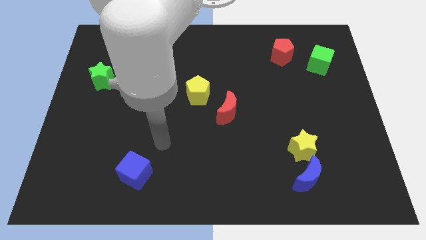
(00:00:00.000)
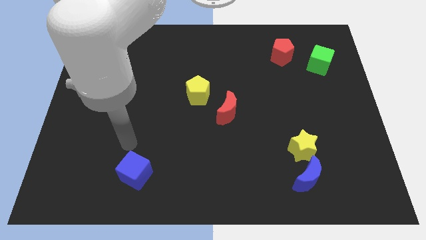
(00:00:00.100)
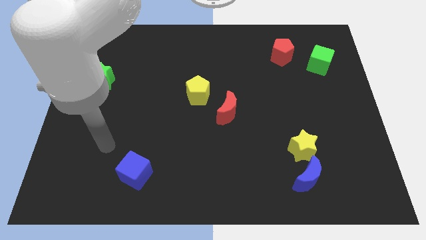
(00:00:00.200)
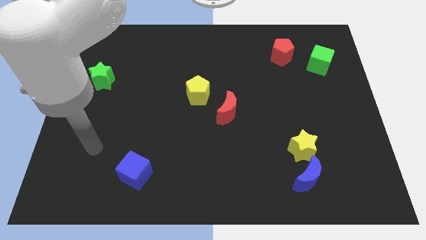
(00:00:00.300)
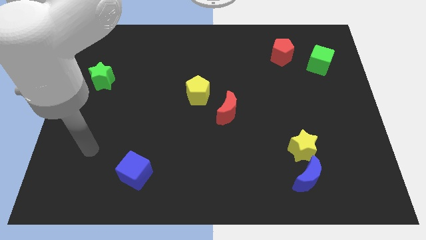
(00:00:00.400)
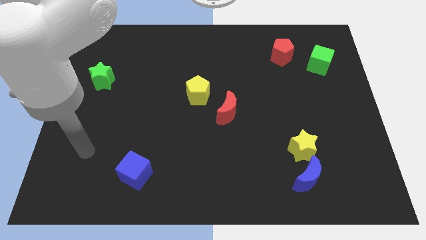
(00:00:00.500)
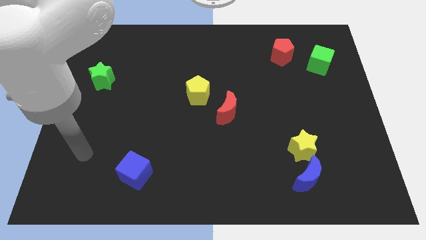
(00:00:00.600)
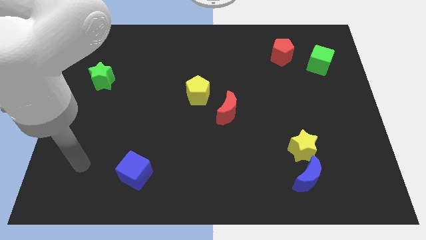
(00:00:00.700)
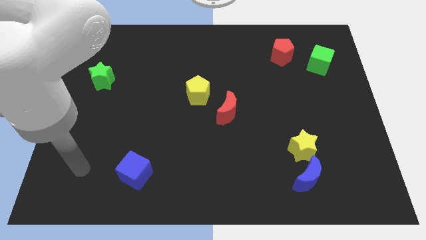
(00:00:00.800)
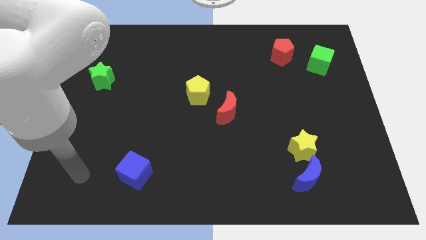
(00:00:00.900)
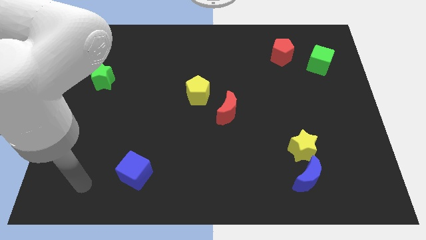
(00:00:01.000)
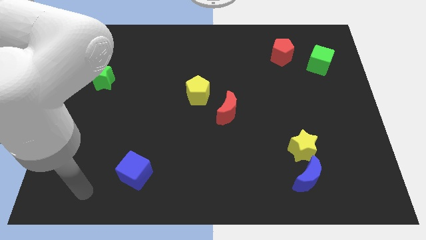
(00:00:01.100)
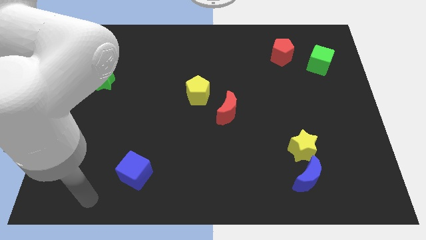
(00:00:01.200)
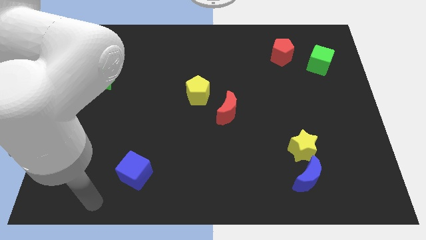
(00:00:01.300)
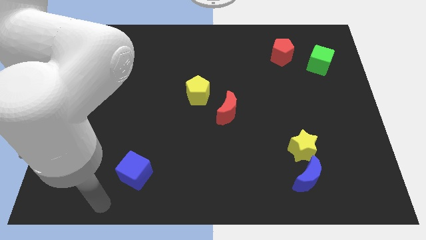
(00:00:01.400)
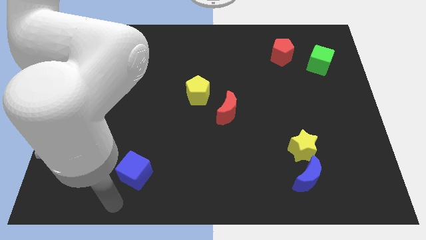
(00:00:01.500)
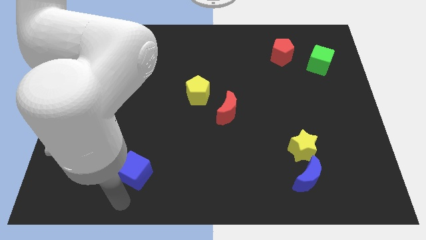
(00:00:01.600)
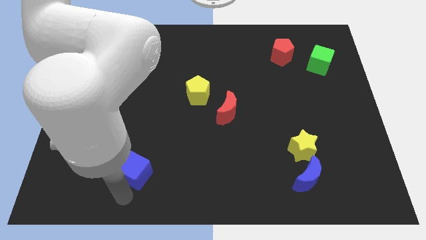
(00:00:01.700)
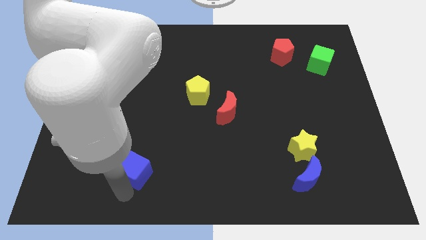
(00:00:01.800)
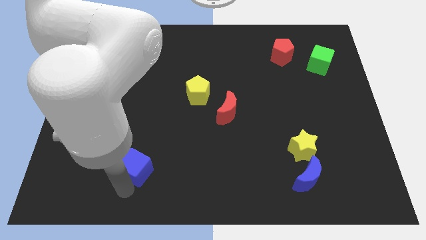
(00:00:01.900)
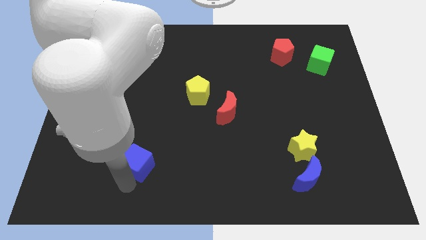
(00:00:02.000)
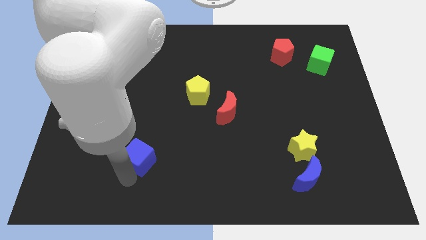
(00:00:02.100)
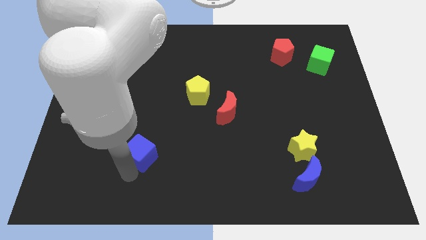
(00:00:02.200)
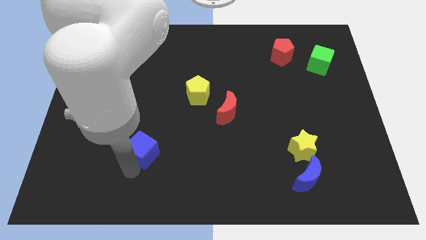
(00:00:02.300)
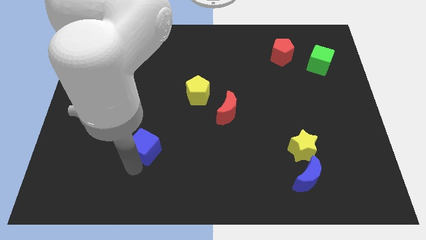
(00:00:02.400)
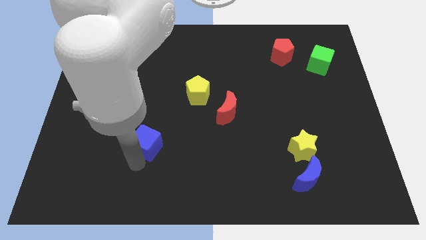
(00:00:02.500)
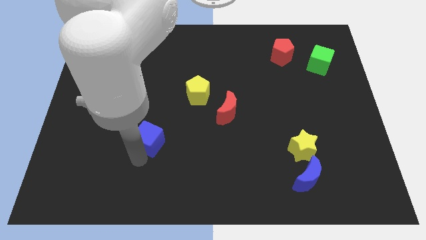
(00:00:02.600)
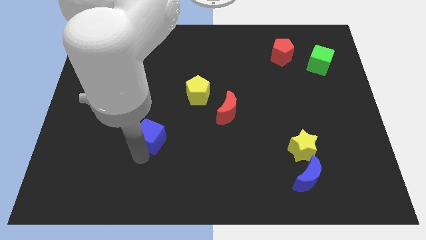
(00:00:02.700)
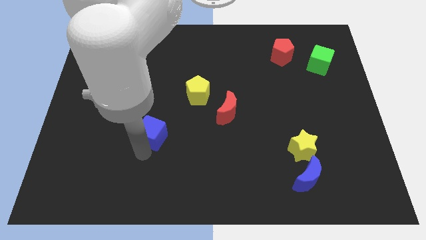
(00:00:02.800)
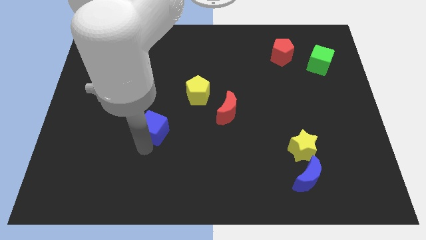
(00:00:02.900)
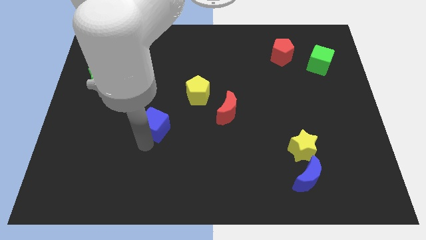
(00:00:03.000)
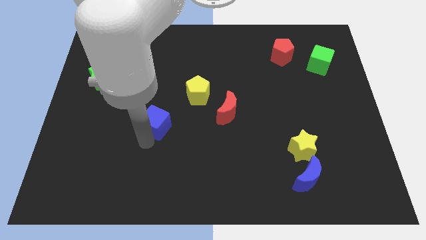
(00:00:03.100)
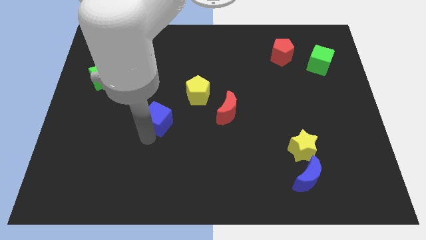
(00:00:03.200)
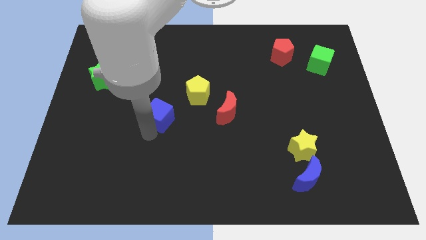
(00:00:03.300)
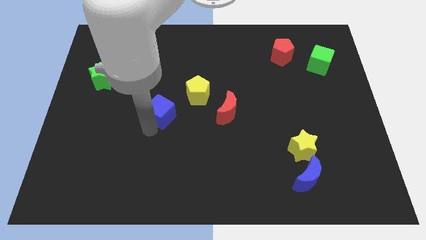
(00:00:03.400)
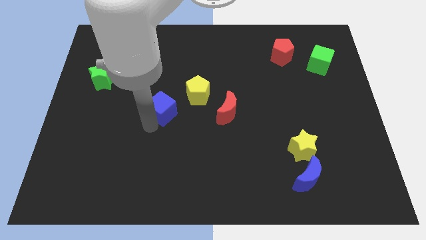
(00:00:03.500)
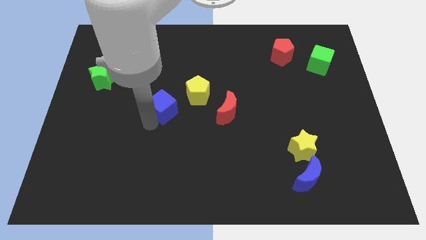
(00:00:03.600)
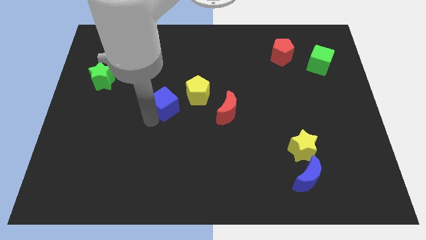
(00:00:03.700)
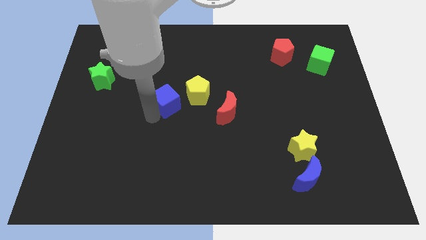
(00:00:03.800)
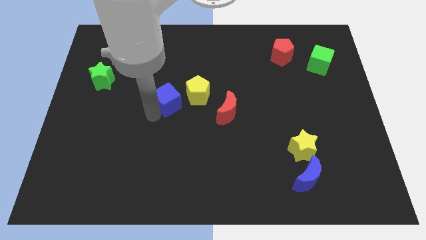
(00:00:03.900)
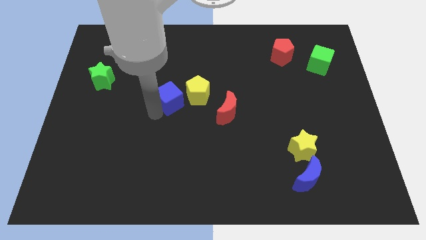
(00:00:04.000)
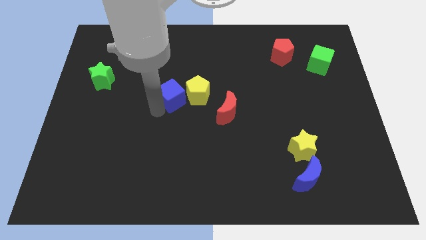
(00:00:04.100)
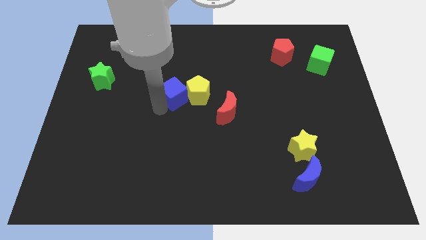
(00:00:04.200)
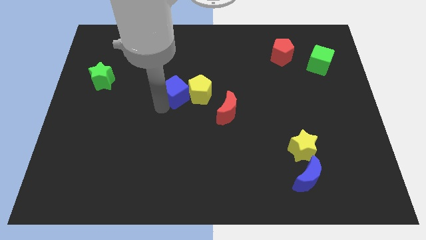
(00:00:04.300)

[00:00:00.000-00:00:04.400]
slide the blue cube towards the yellow pentagon

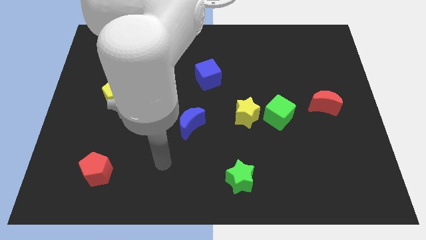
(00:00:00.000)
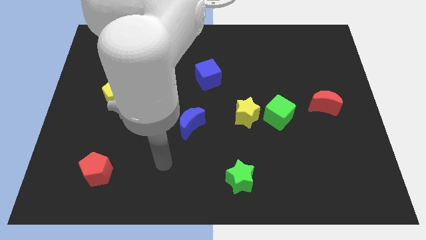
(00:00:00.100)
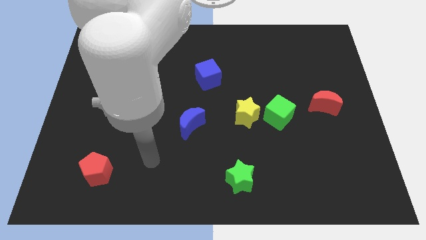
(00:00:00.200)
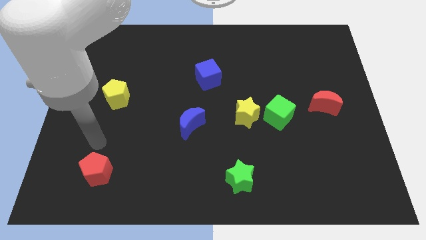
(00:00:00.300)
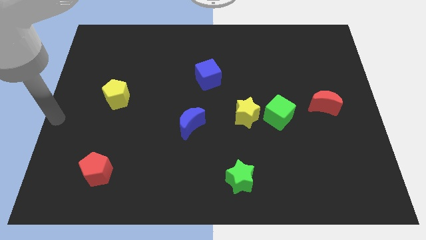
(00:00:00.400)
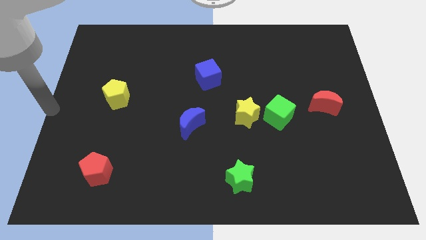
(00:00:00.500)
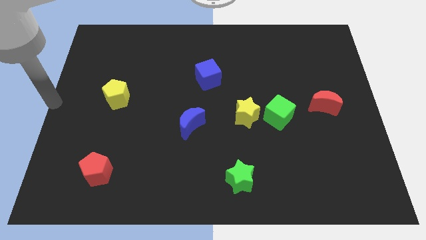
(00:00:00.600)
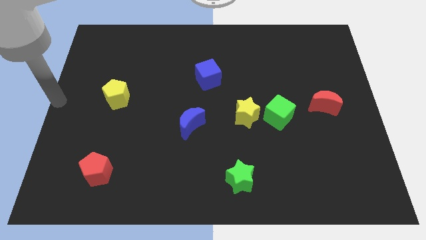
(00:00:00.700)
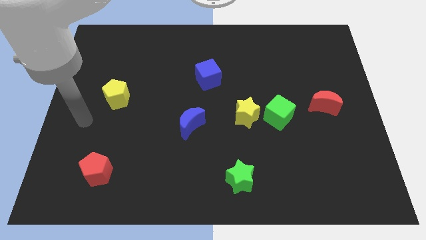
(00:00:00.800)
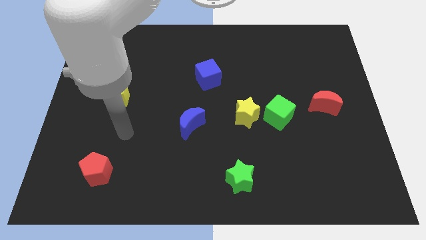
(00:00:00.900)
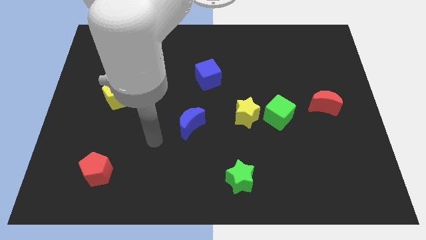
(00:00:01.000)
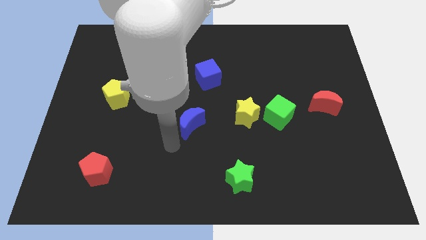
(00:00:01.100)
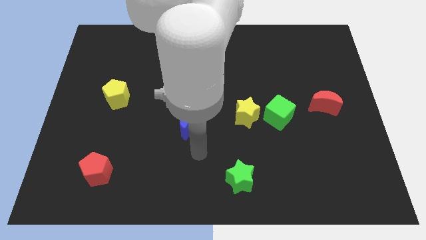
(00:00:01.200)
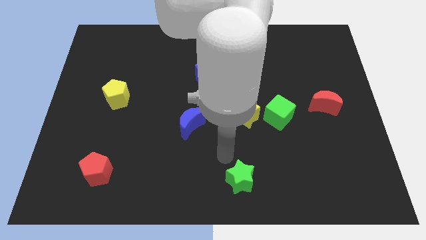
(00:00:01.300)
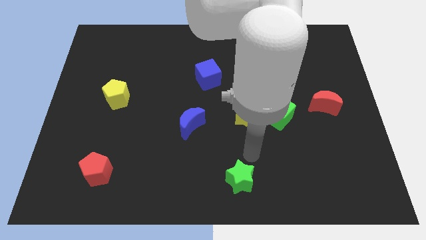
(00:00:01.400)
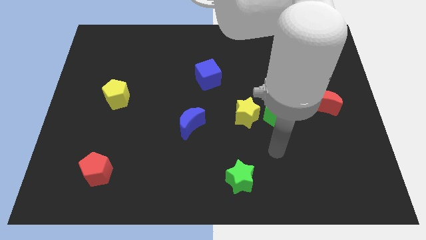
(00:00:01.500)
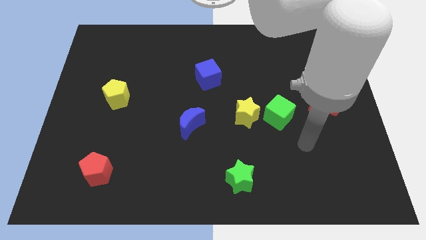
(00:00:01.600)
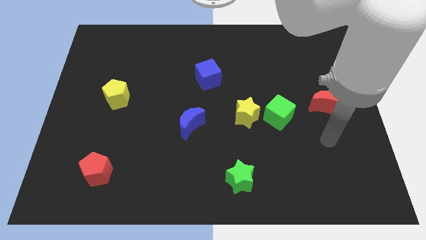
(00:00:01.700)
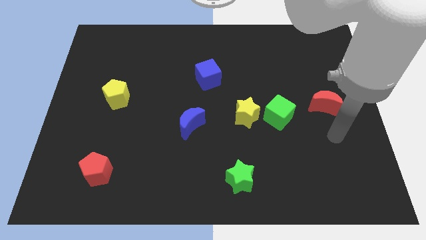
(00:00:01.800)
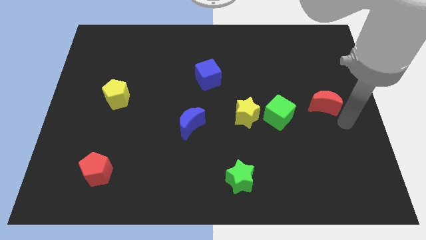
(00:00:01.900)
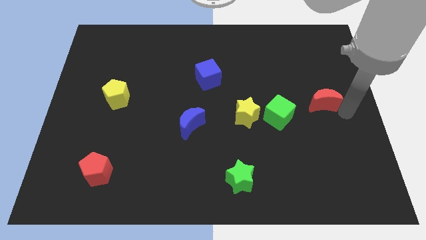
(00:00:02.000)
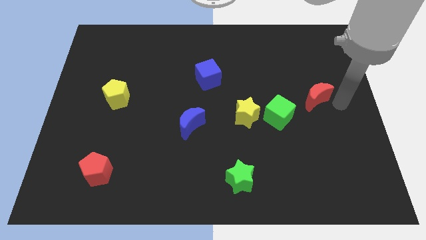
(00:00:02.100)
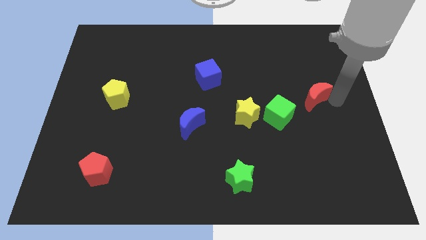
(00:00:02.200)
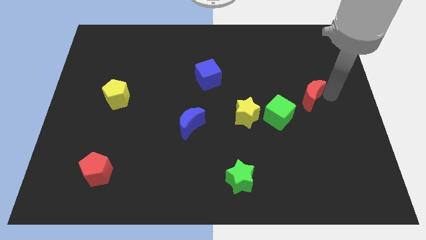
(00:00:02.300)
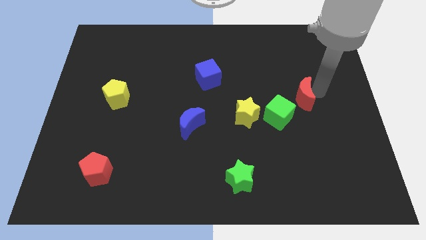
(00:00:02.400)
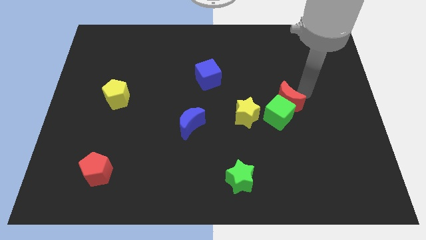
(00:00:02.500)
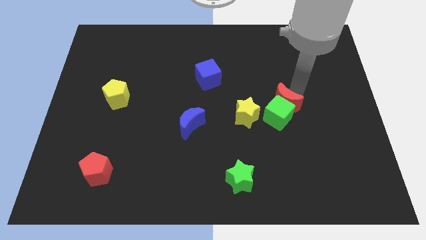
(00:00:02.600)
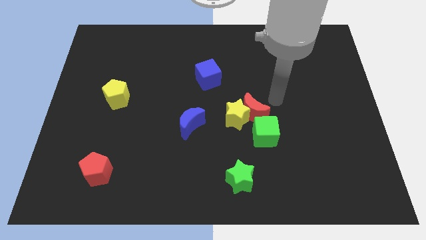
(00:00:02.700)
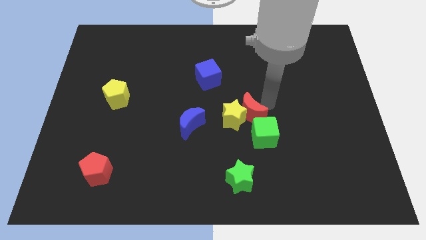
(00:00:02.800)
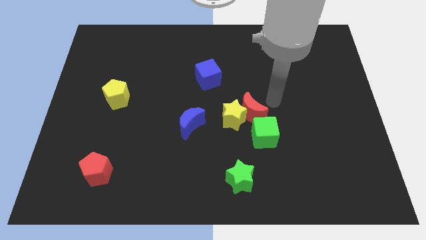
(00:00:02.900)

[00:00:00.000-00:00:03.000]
push the red moon towards the yellow star

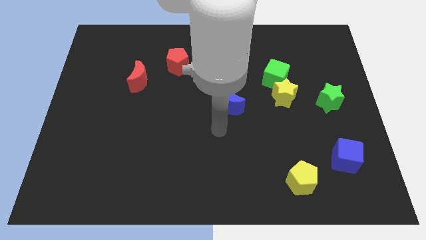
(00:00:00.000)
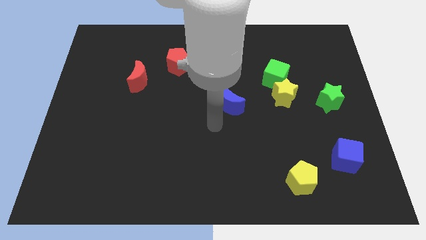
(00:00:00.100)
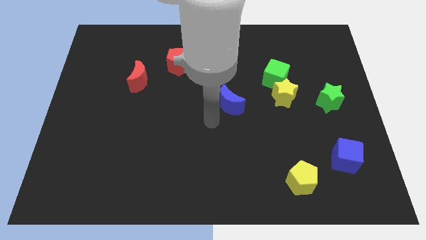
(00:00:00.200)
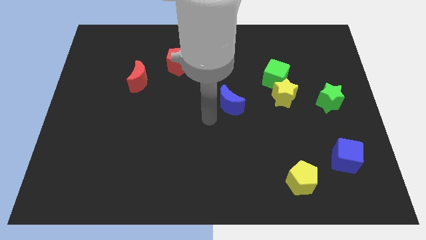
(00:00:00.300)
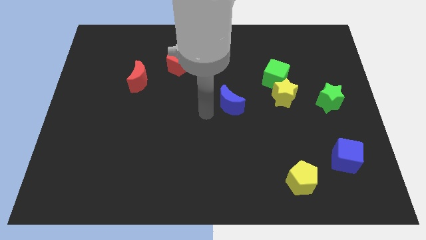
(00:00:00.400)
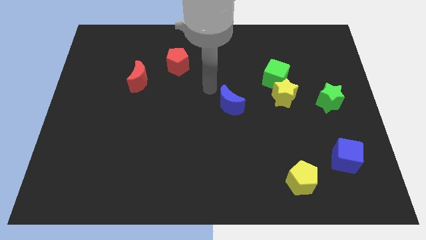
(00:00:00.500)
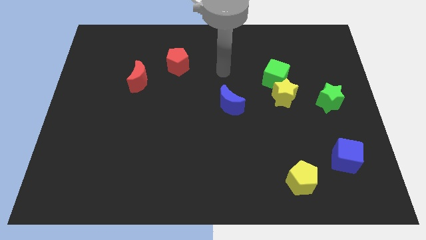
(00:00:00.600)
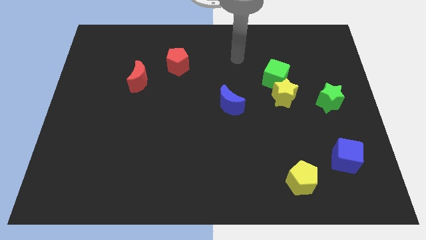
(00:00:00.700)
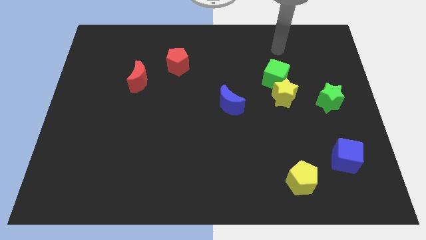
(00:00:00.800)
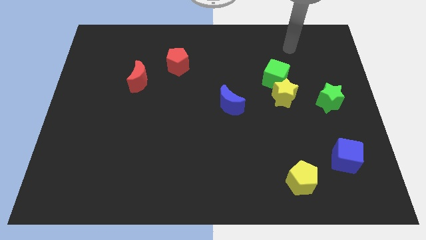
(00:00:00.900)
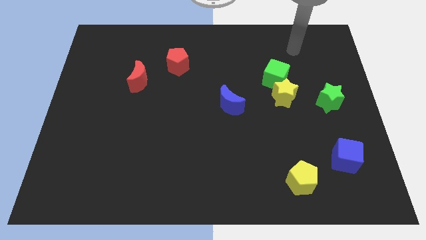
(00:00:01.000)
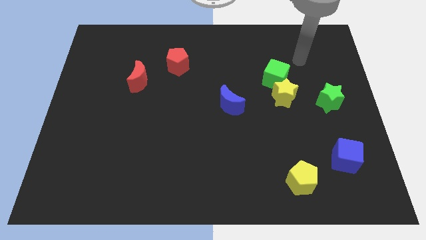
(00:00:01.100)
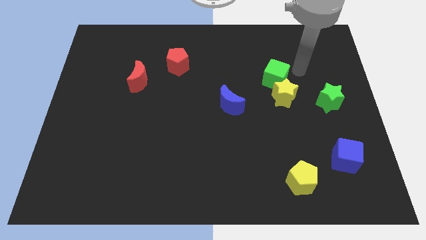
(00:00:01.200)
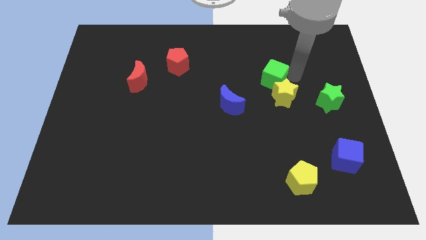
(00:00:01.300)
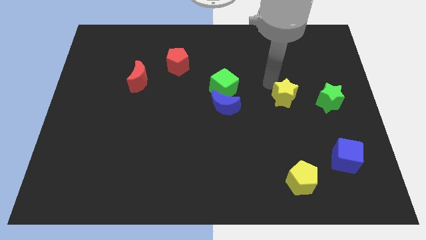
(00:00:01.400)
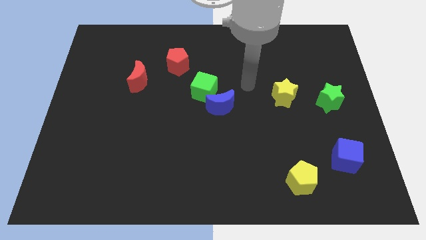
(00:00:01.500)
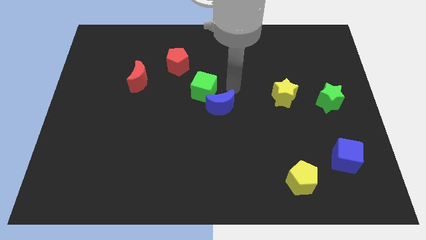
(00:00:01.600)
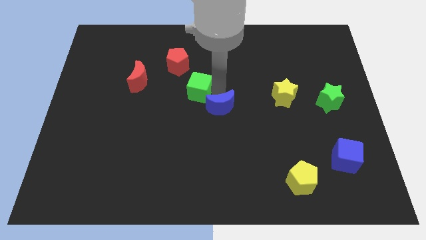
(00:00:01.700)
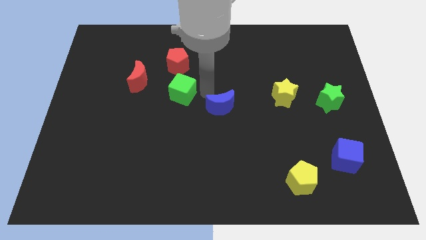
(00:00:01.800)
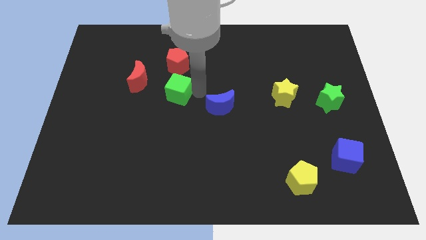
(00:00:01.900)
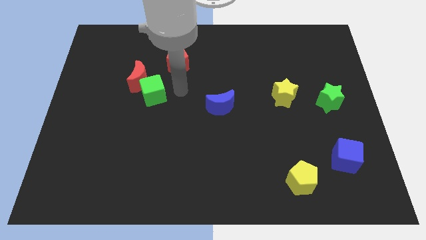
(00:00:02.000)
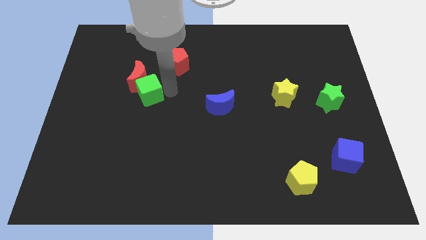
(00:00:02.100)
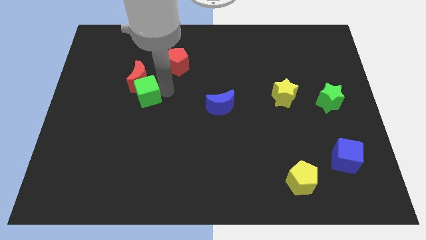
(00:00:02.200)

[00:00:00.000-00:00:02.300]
push the green cube towards the red moon
